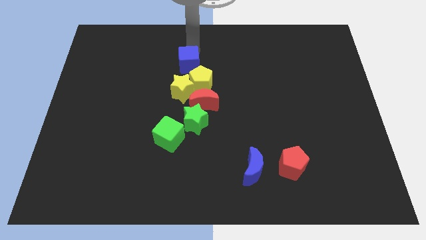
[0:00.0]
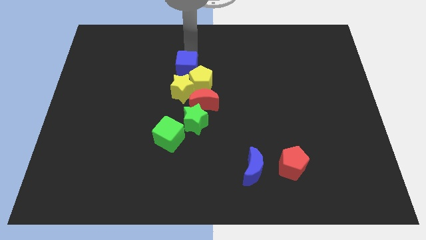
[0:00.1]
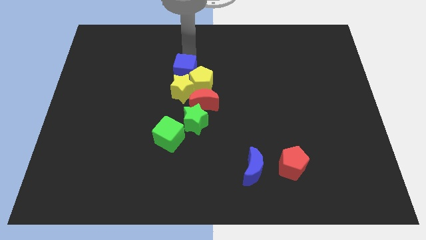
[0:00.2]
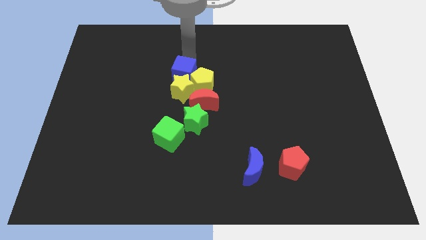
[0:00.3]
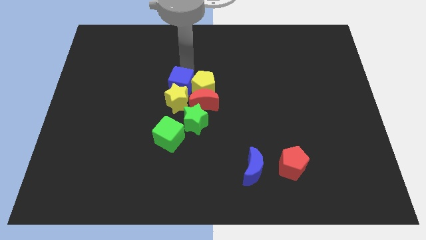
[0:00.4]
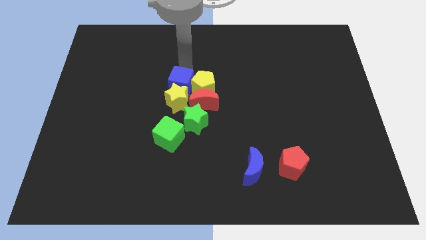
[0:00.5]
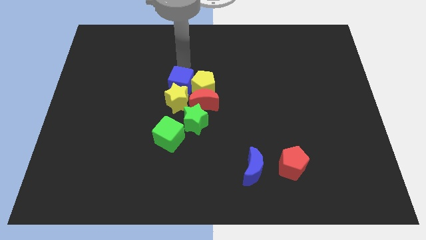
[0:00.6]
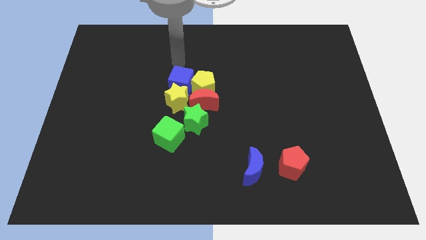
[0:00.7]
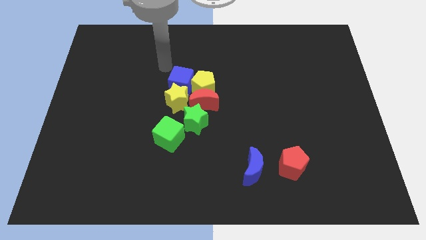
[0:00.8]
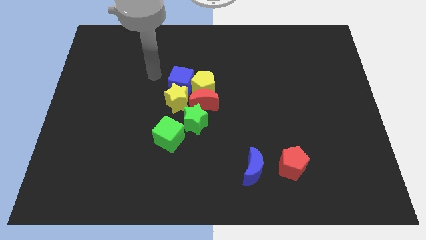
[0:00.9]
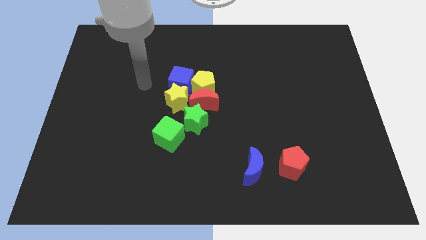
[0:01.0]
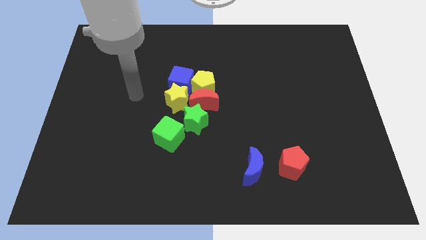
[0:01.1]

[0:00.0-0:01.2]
move the blue cube slightly downwards

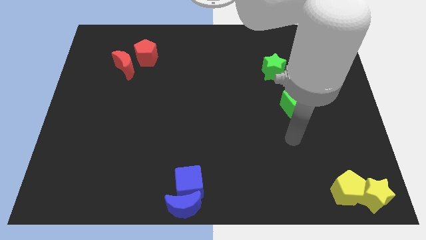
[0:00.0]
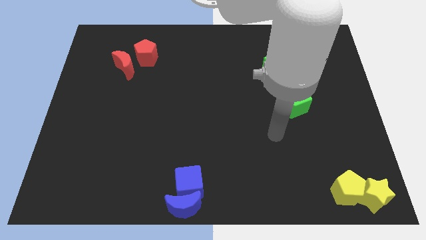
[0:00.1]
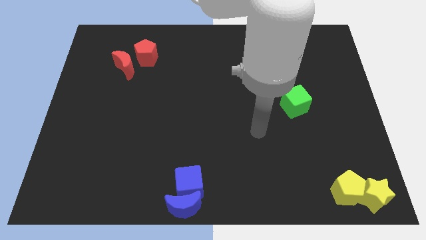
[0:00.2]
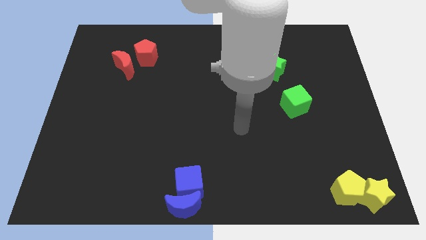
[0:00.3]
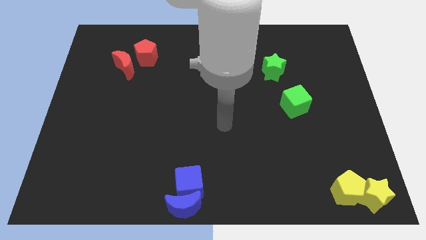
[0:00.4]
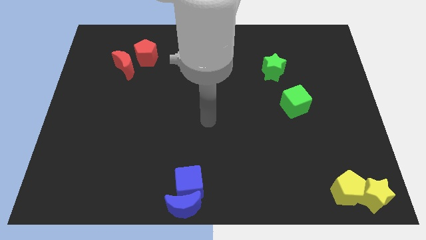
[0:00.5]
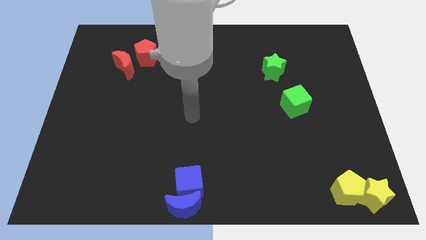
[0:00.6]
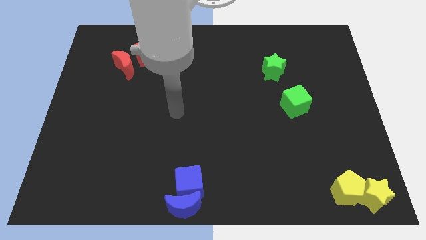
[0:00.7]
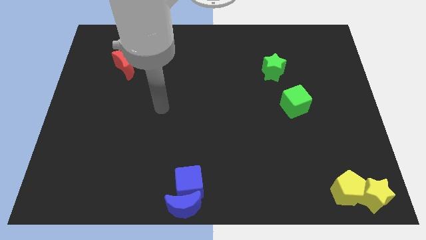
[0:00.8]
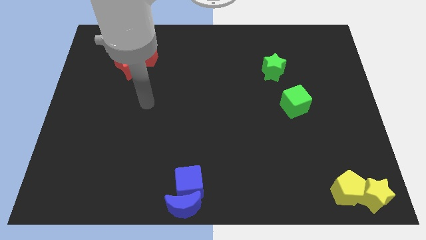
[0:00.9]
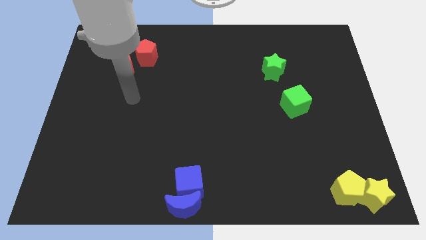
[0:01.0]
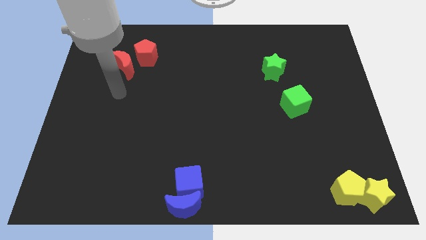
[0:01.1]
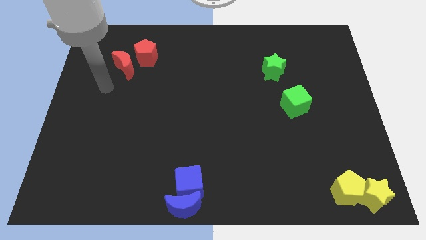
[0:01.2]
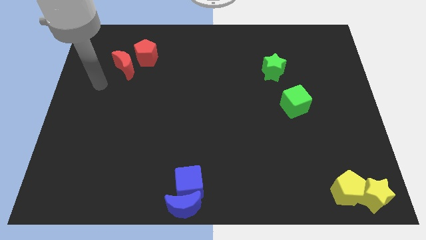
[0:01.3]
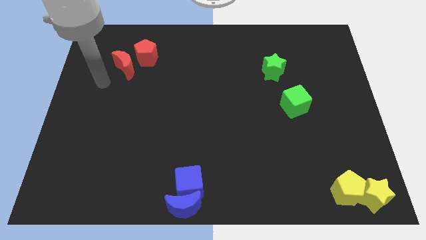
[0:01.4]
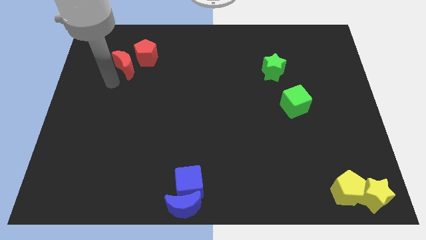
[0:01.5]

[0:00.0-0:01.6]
move your arm to the left side of the red moon

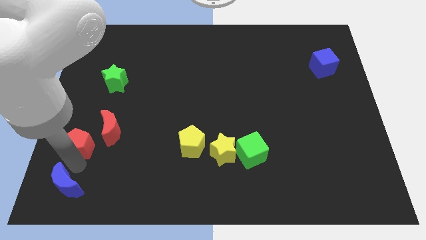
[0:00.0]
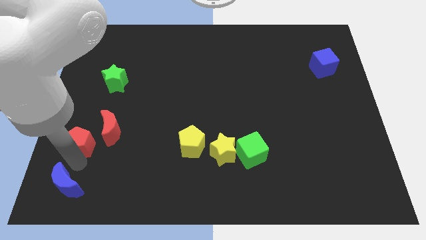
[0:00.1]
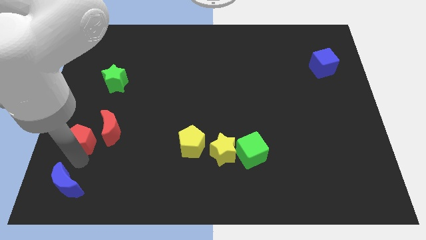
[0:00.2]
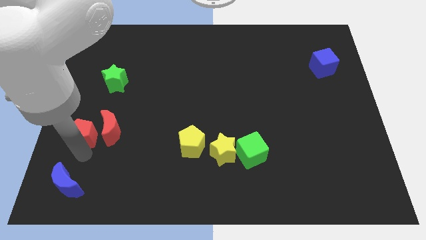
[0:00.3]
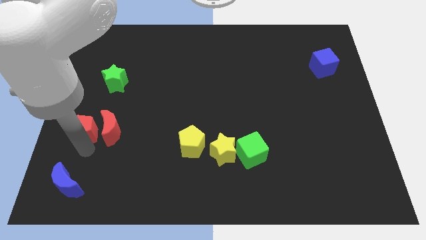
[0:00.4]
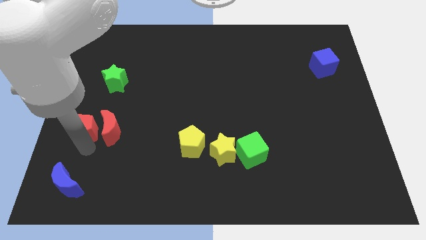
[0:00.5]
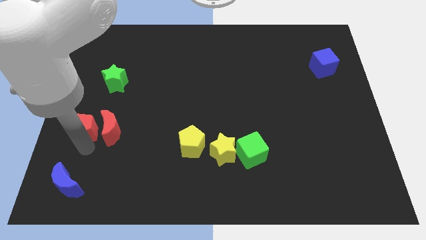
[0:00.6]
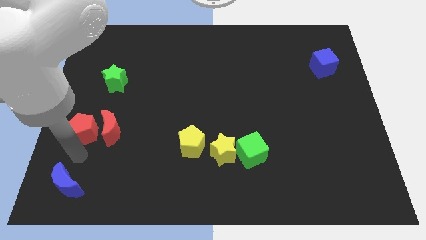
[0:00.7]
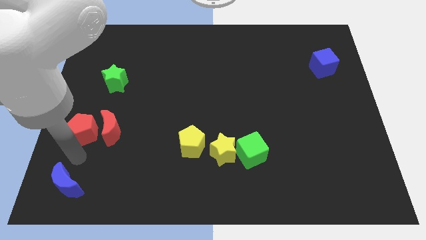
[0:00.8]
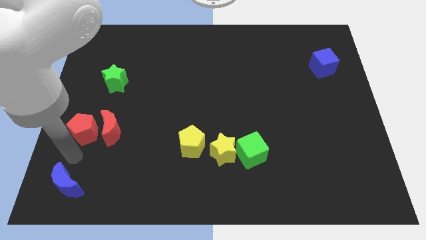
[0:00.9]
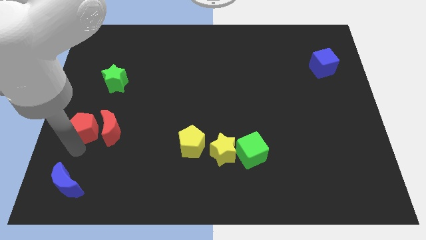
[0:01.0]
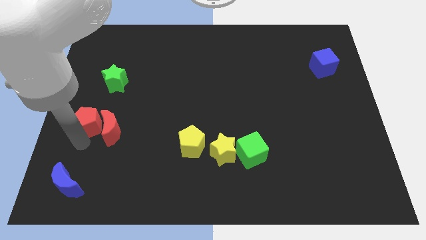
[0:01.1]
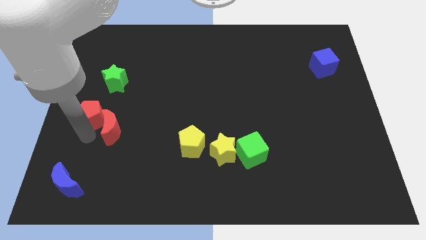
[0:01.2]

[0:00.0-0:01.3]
separate red pentagon from blue moon

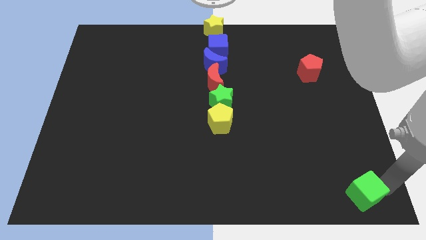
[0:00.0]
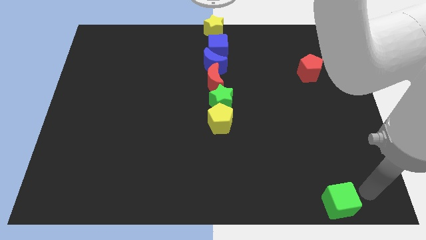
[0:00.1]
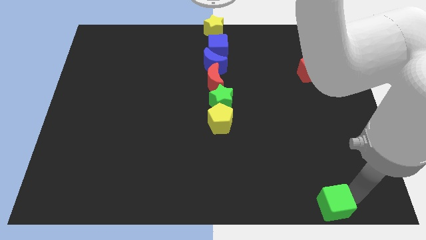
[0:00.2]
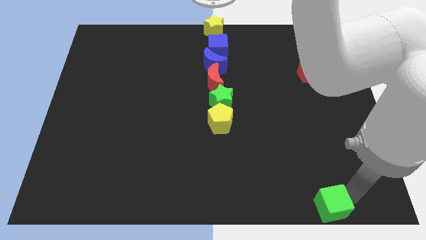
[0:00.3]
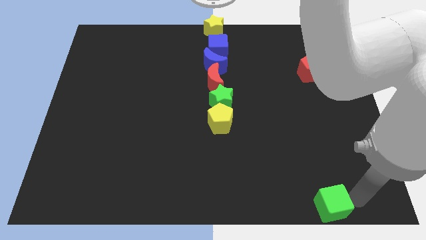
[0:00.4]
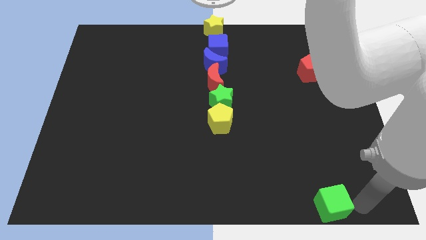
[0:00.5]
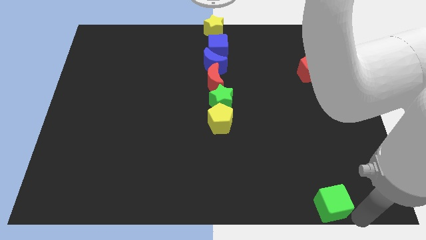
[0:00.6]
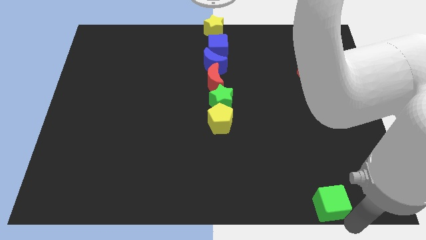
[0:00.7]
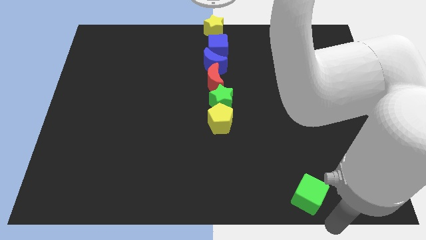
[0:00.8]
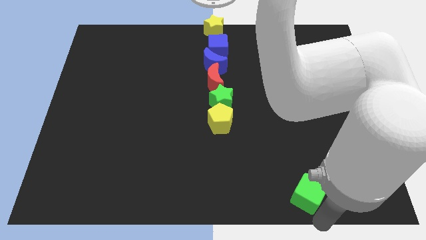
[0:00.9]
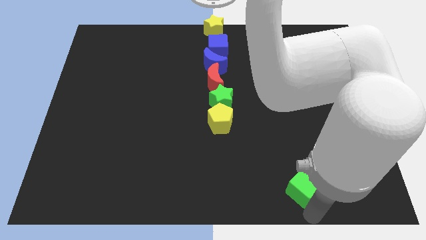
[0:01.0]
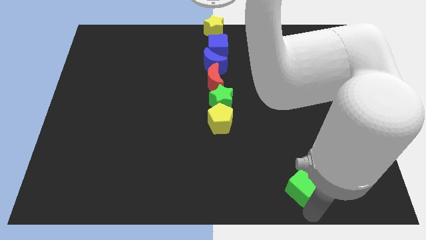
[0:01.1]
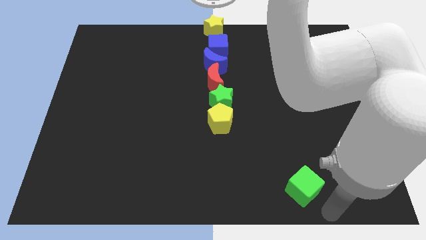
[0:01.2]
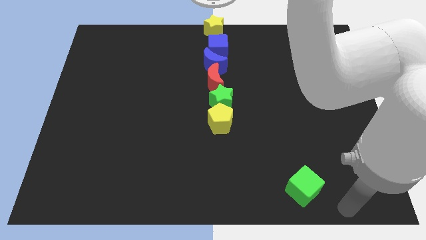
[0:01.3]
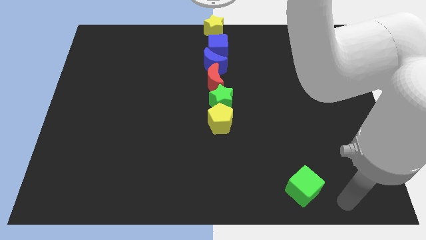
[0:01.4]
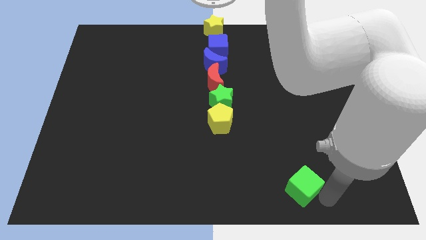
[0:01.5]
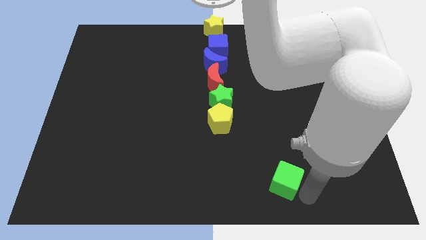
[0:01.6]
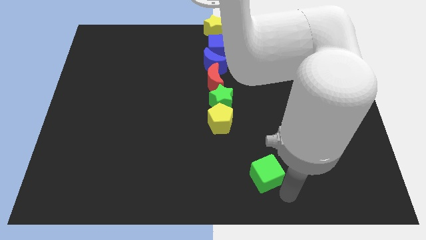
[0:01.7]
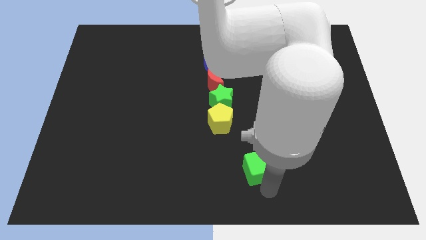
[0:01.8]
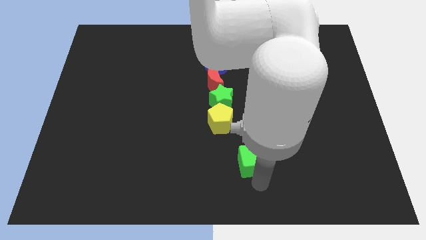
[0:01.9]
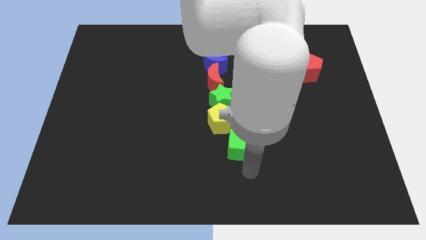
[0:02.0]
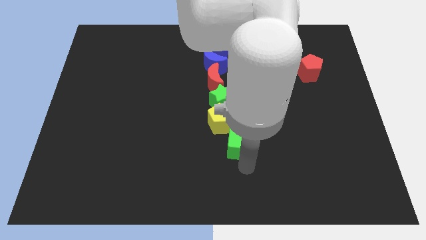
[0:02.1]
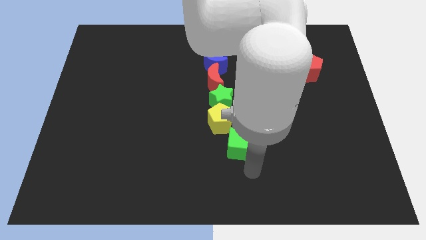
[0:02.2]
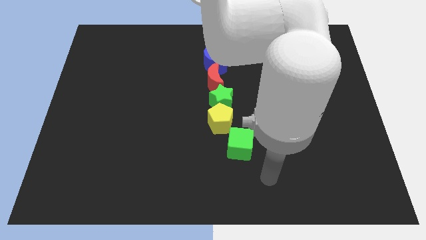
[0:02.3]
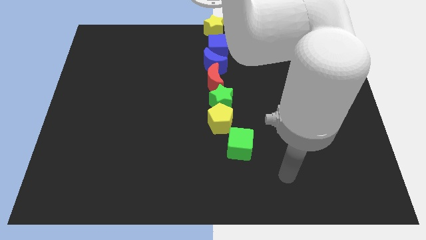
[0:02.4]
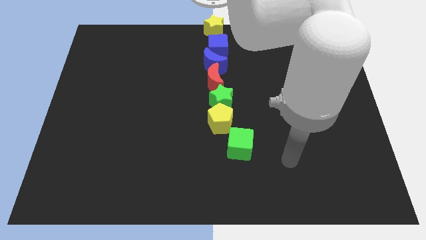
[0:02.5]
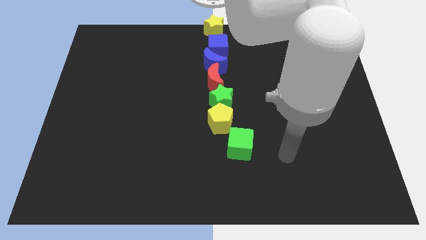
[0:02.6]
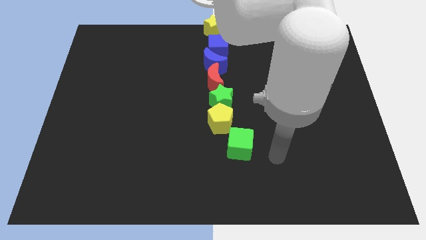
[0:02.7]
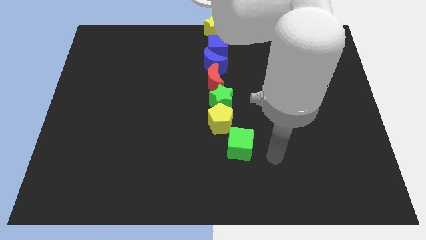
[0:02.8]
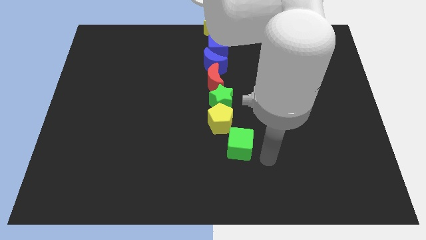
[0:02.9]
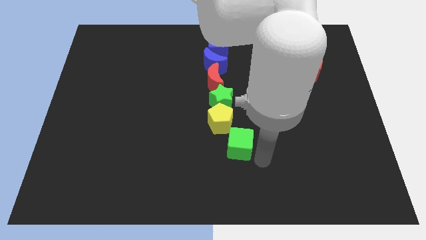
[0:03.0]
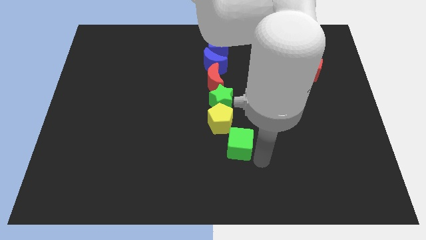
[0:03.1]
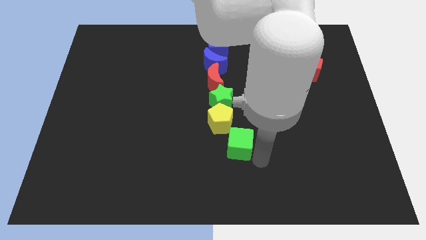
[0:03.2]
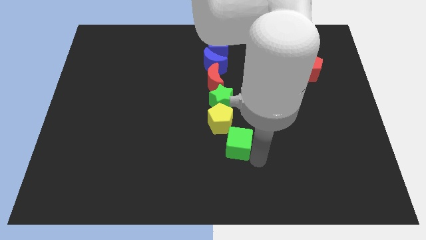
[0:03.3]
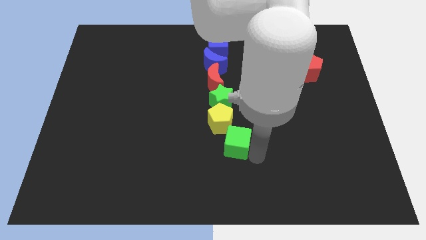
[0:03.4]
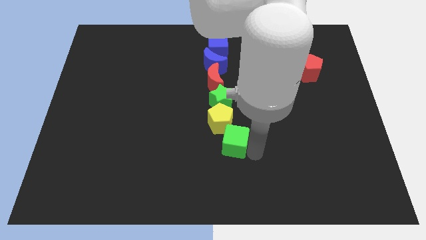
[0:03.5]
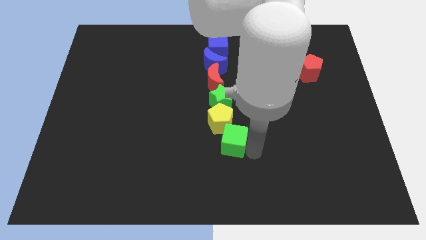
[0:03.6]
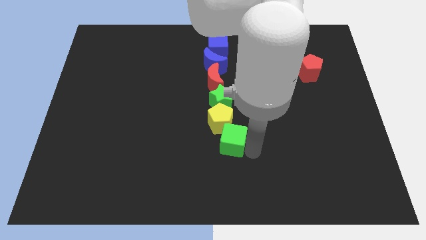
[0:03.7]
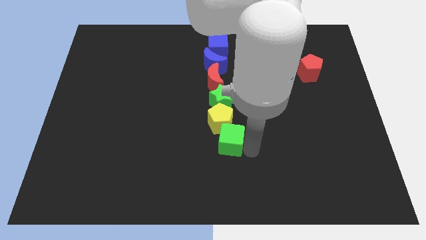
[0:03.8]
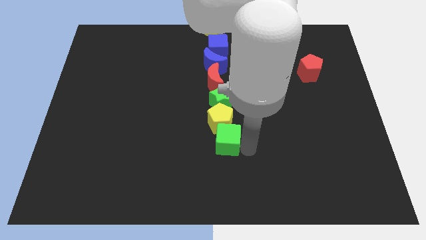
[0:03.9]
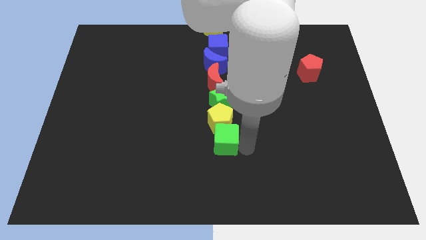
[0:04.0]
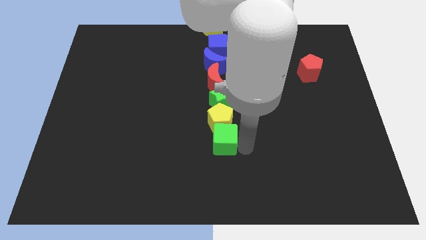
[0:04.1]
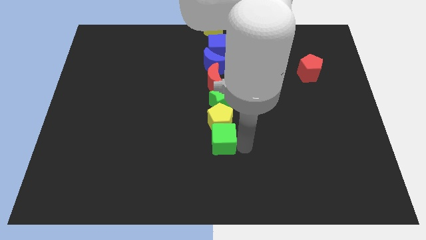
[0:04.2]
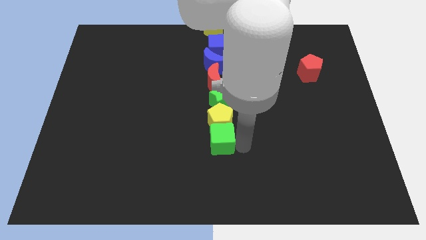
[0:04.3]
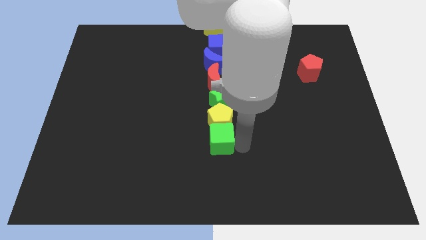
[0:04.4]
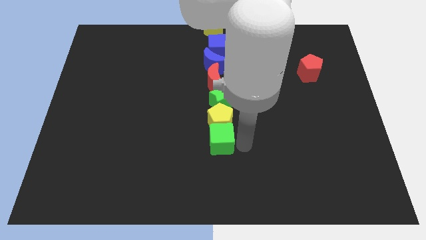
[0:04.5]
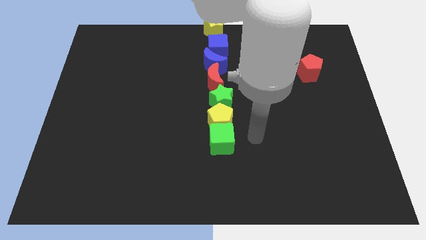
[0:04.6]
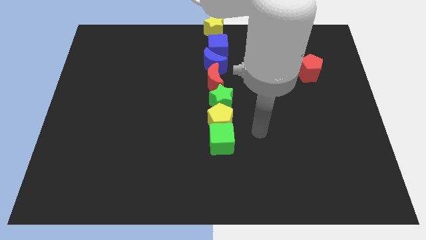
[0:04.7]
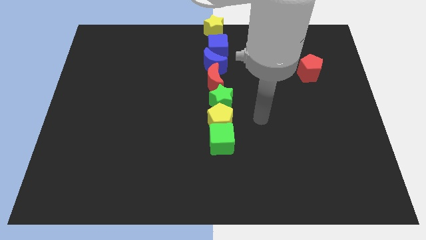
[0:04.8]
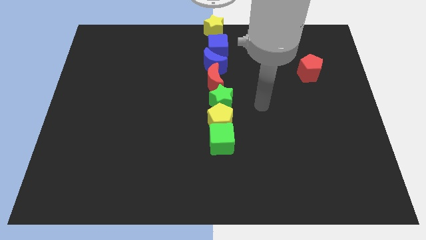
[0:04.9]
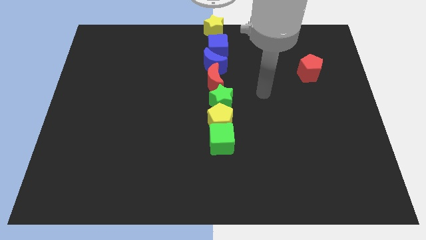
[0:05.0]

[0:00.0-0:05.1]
place the green cube at the bottom of the yellow pentagon
